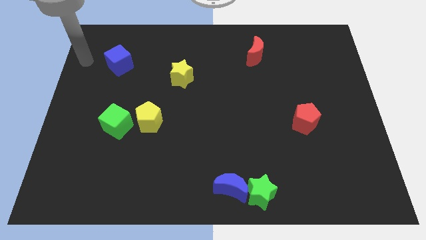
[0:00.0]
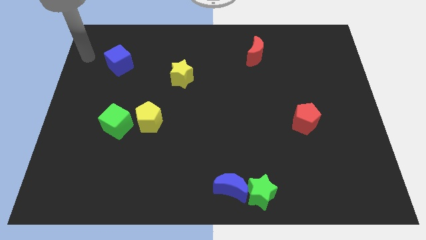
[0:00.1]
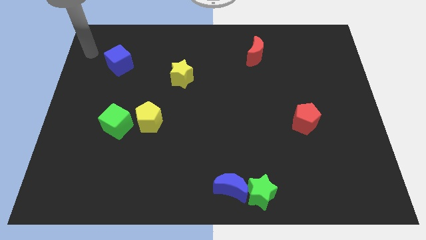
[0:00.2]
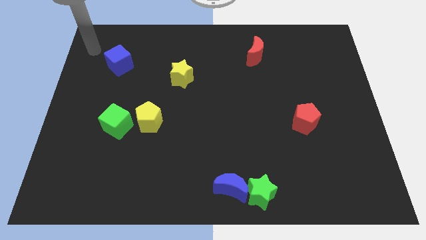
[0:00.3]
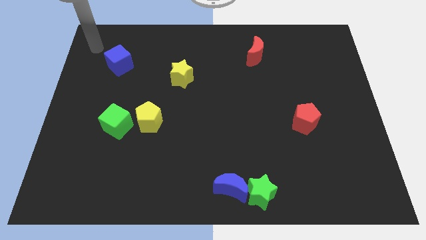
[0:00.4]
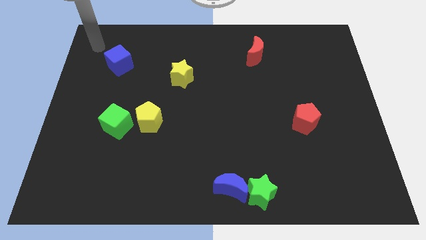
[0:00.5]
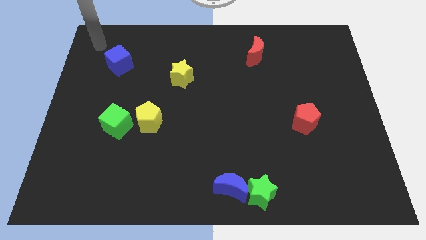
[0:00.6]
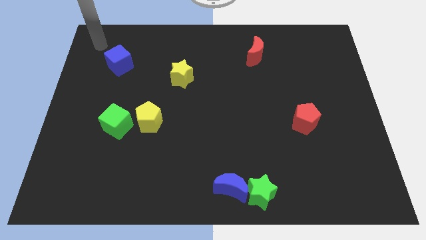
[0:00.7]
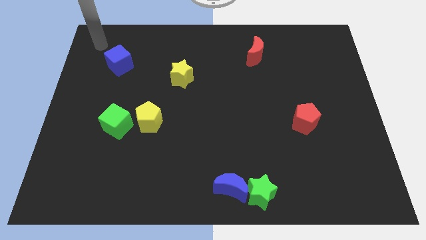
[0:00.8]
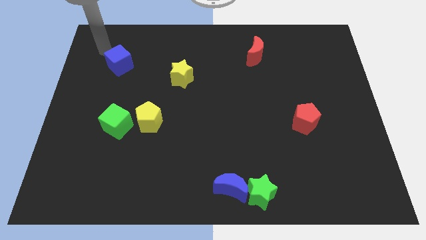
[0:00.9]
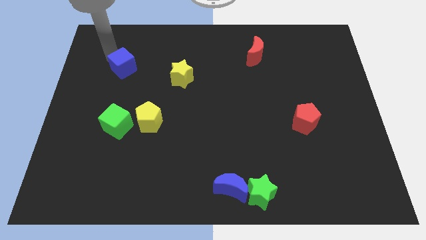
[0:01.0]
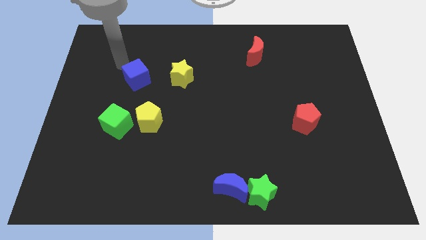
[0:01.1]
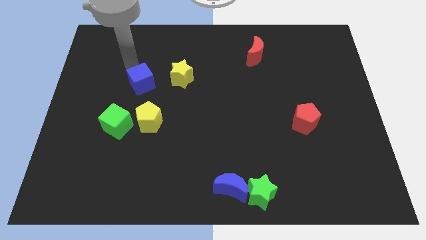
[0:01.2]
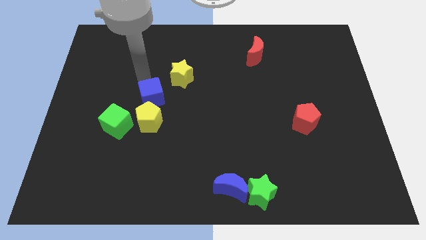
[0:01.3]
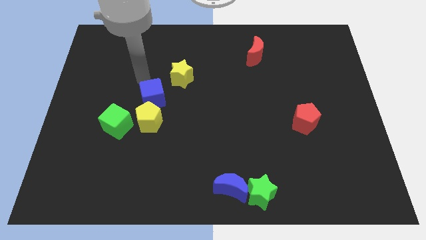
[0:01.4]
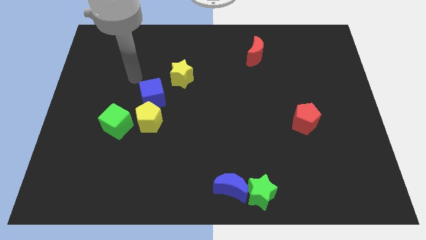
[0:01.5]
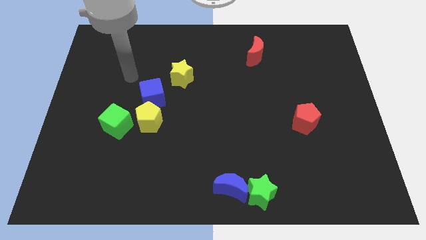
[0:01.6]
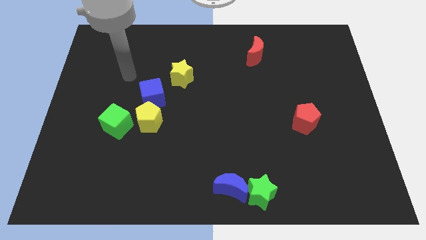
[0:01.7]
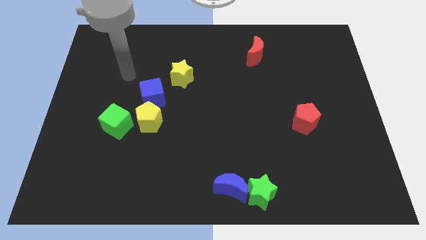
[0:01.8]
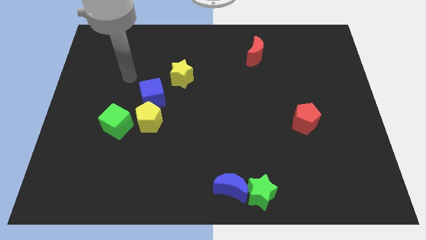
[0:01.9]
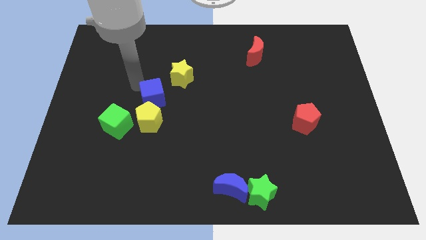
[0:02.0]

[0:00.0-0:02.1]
move blue cube towards yellow pentagon

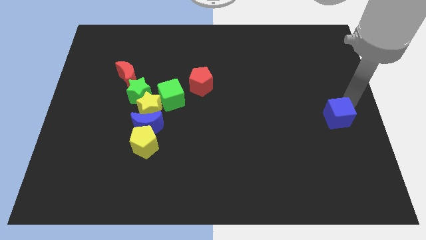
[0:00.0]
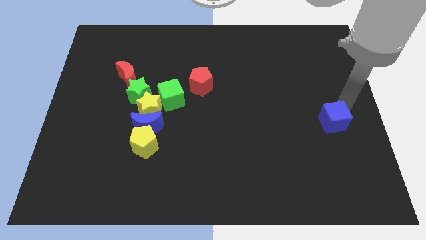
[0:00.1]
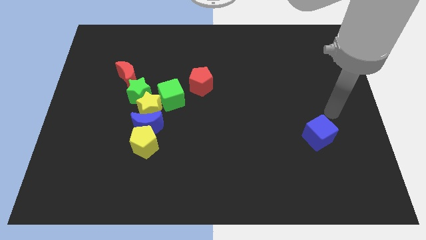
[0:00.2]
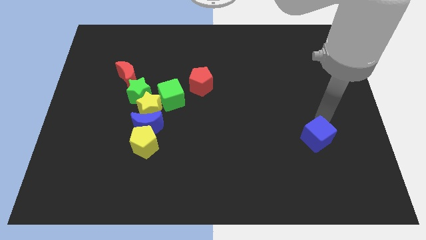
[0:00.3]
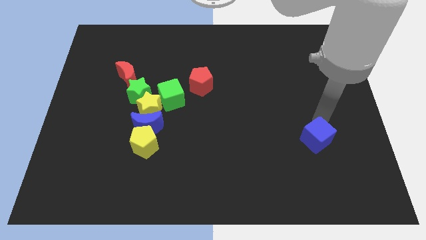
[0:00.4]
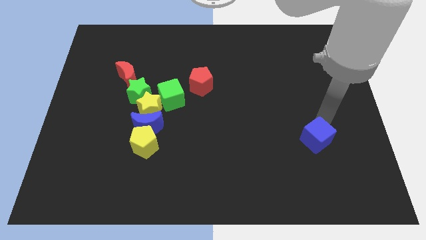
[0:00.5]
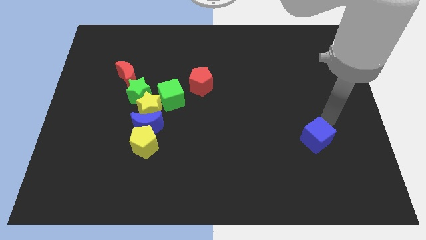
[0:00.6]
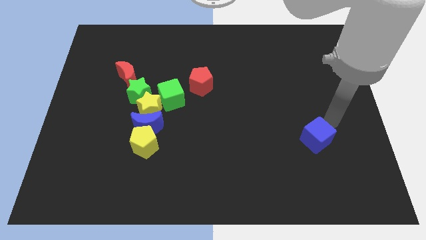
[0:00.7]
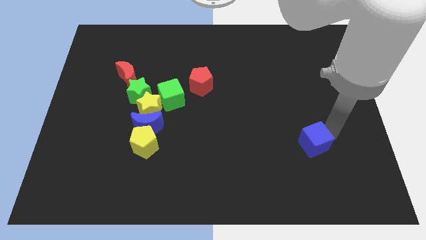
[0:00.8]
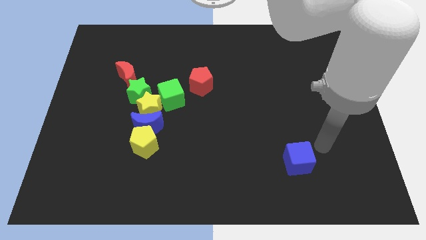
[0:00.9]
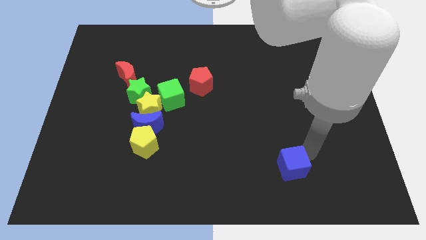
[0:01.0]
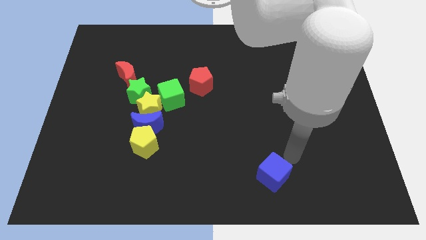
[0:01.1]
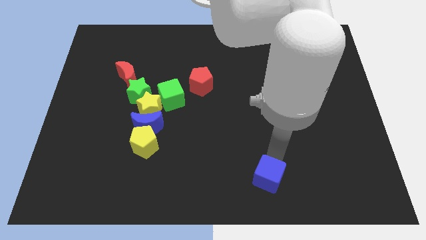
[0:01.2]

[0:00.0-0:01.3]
push the blue cube towards the bottom of board

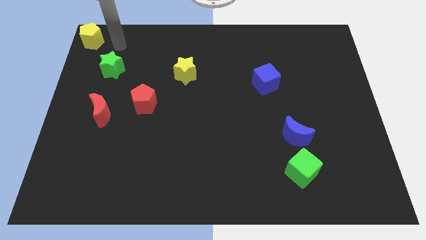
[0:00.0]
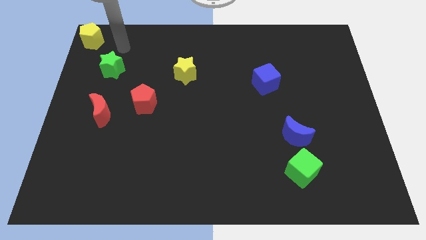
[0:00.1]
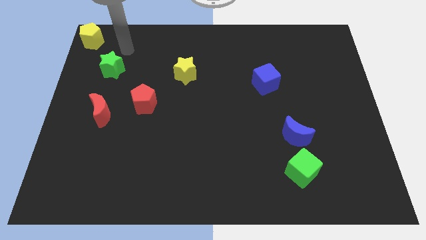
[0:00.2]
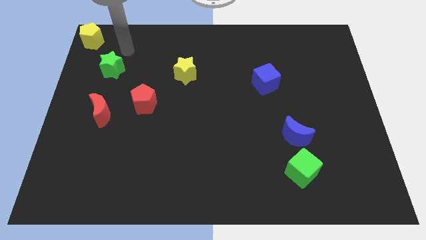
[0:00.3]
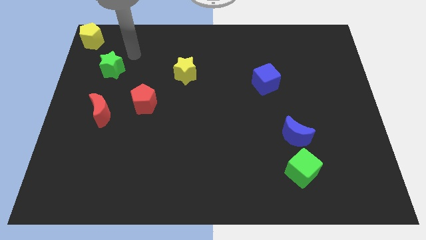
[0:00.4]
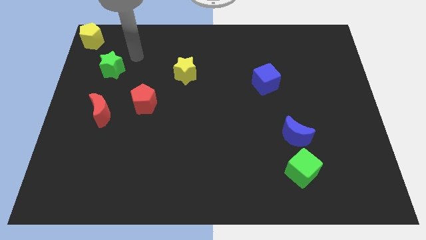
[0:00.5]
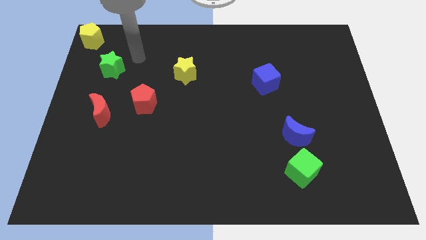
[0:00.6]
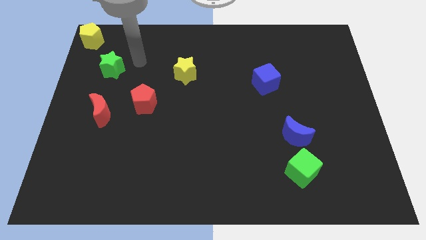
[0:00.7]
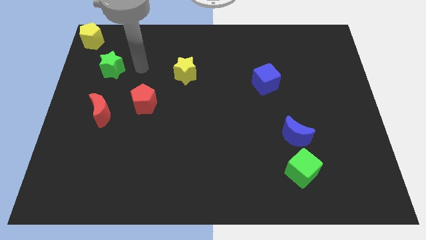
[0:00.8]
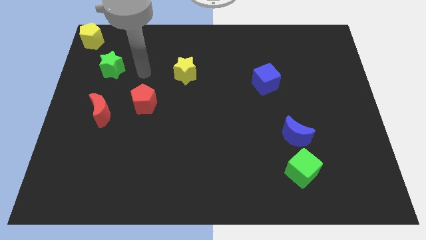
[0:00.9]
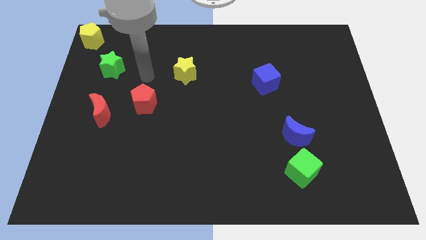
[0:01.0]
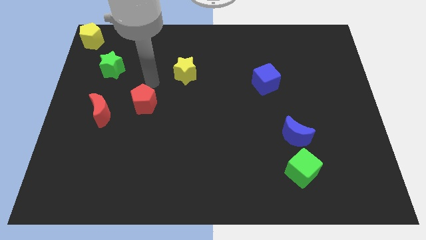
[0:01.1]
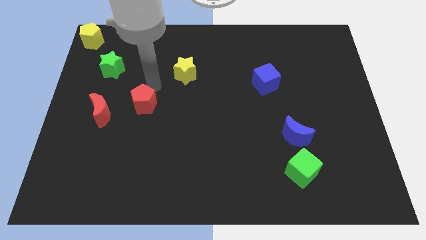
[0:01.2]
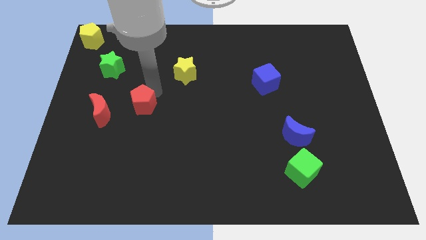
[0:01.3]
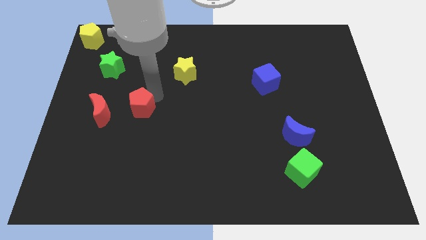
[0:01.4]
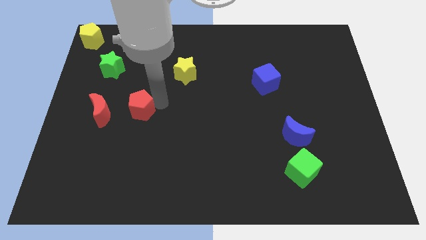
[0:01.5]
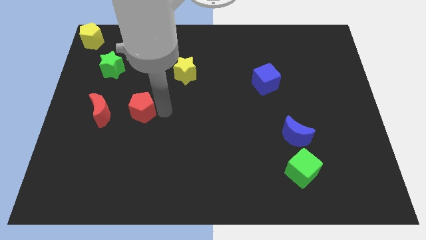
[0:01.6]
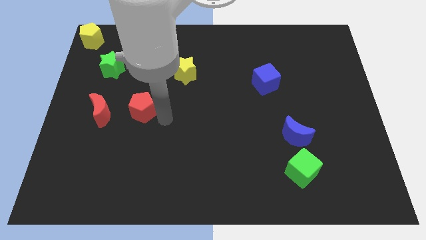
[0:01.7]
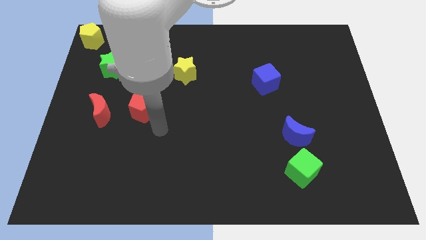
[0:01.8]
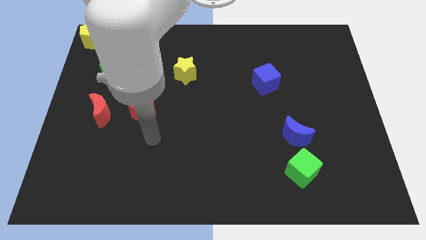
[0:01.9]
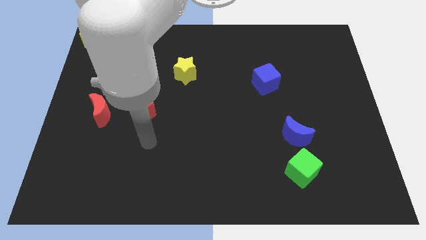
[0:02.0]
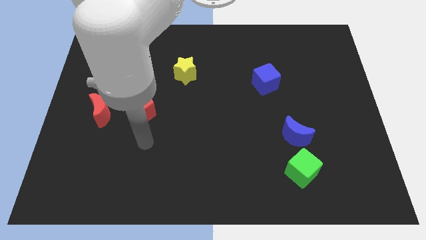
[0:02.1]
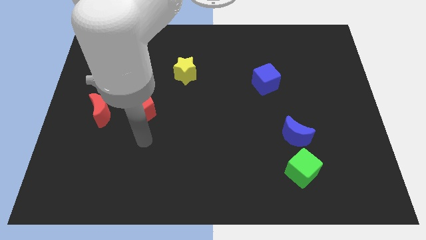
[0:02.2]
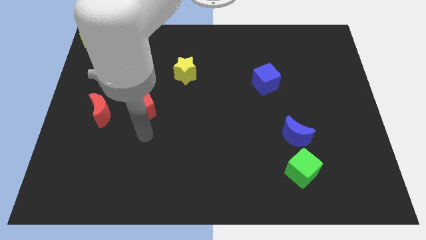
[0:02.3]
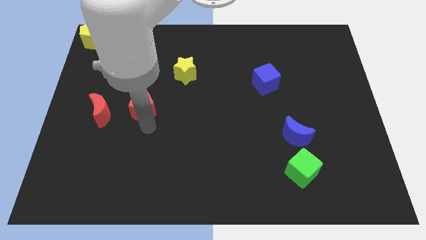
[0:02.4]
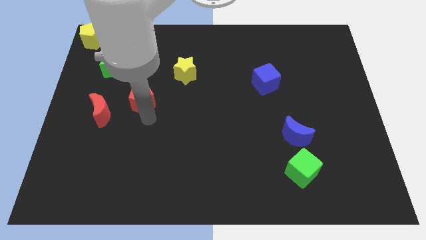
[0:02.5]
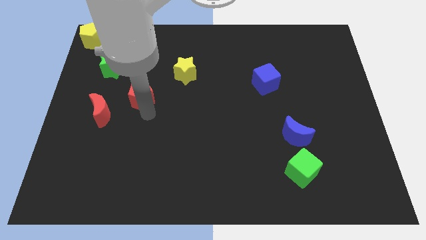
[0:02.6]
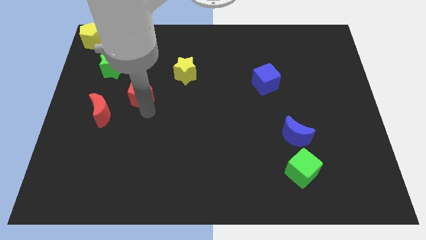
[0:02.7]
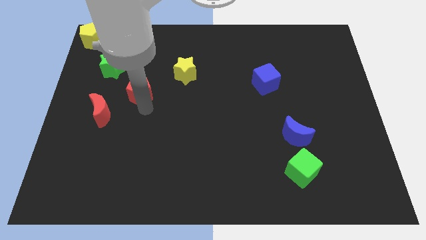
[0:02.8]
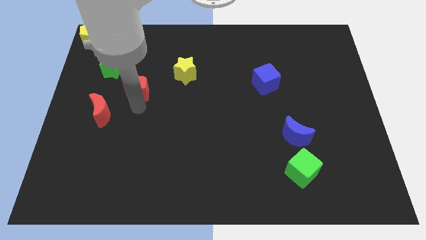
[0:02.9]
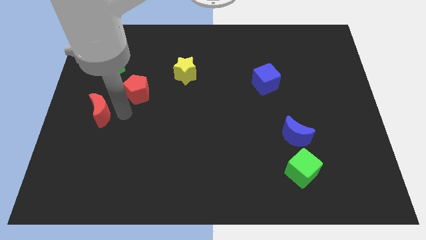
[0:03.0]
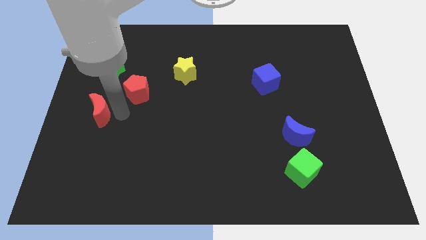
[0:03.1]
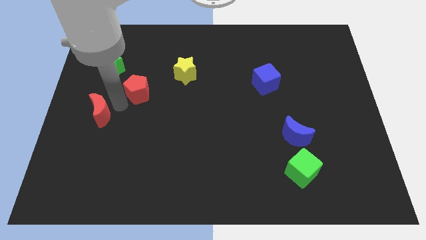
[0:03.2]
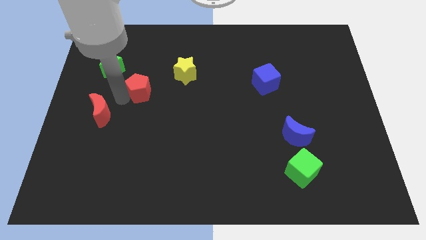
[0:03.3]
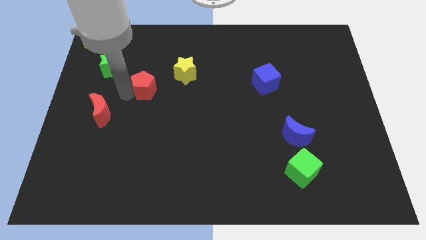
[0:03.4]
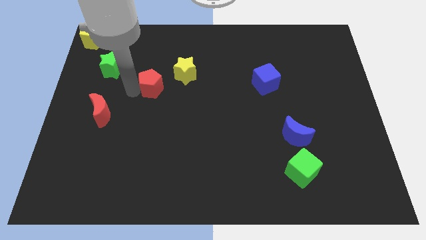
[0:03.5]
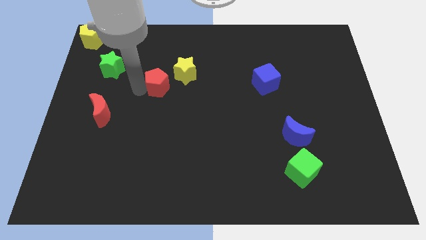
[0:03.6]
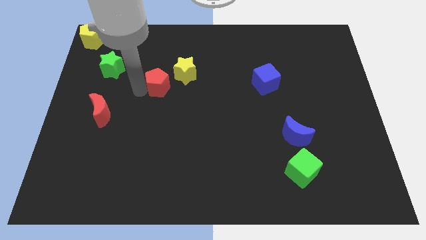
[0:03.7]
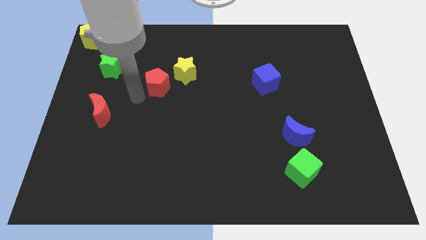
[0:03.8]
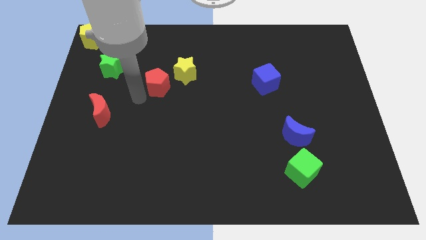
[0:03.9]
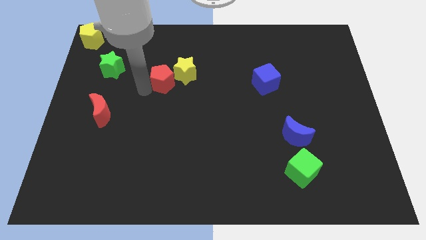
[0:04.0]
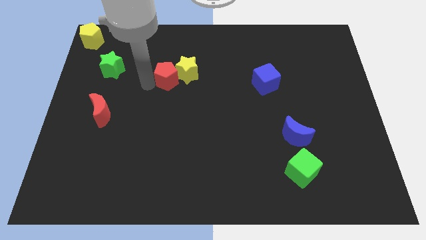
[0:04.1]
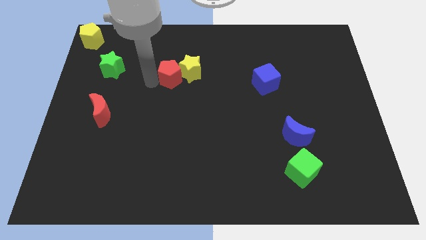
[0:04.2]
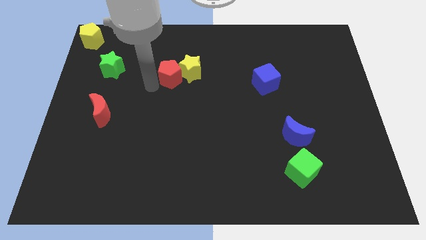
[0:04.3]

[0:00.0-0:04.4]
push the red pentagon into the yellow star

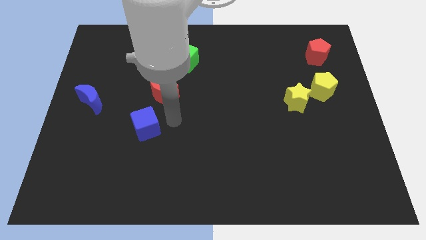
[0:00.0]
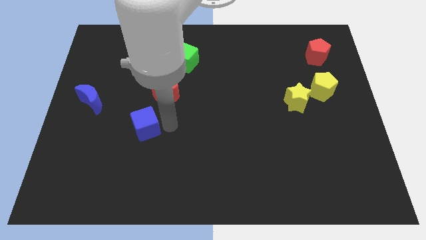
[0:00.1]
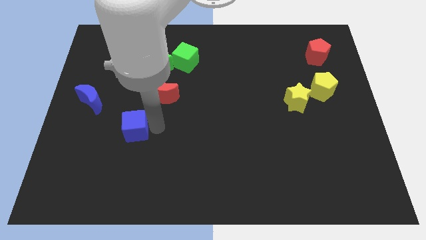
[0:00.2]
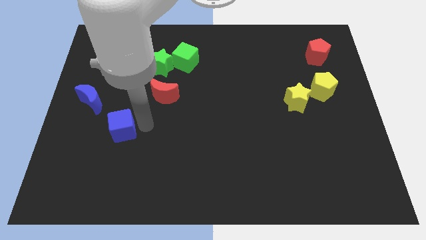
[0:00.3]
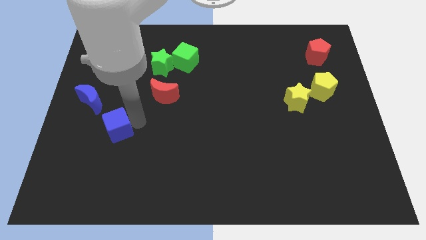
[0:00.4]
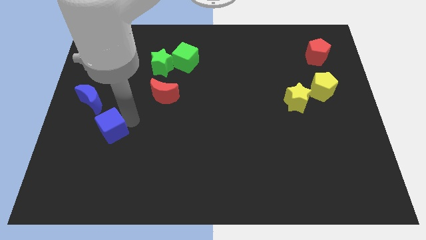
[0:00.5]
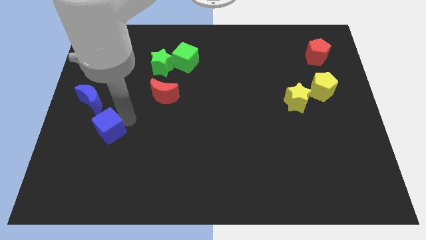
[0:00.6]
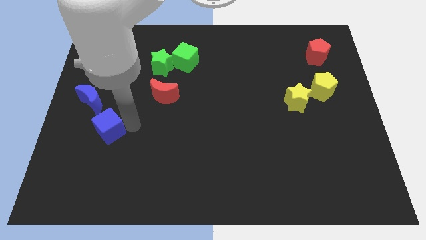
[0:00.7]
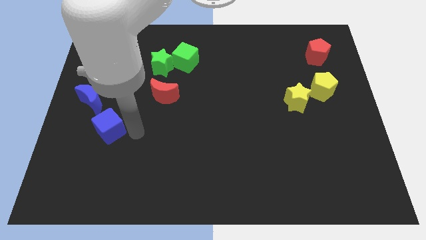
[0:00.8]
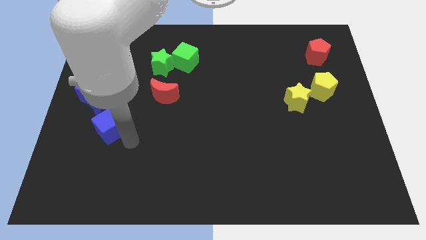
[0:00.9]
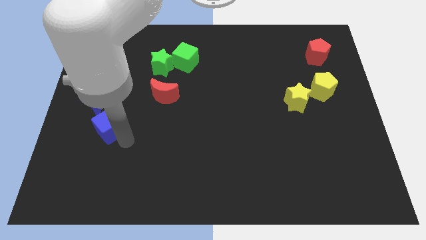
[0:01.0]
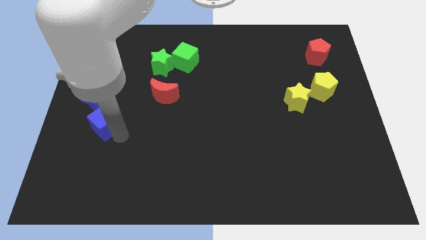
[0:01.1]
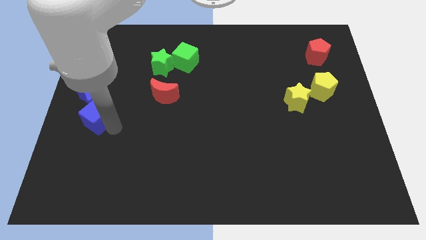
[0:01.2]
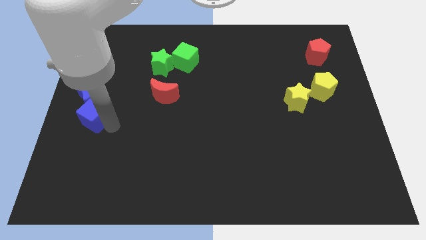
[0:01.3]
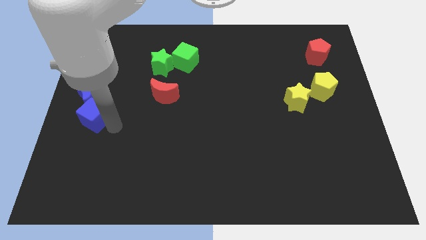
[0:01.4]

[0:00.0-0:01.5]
move the blue cube into the blue crescent
